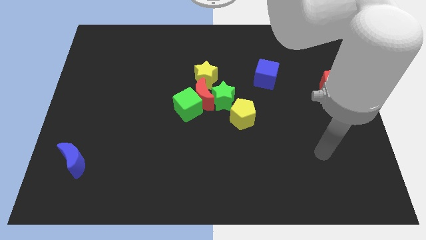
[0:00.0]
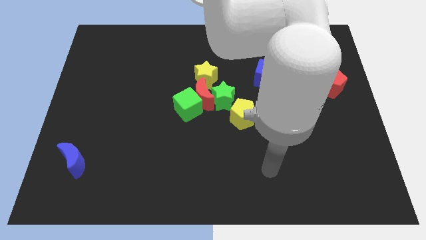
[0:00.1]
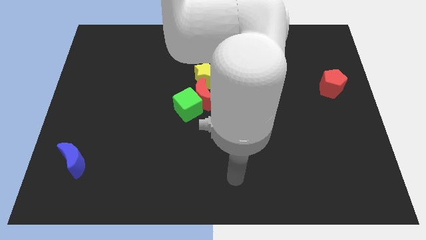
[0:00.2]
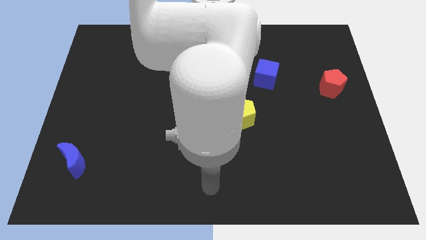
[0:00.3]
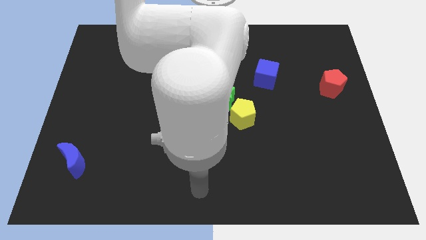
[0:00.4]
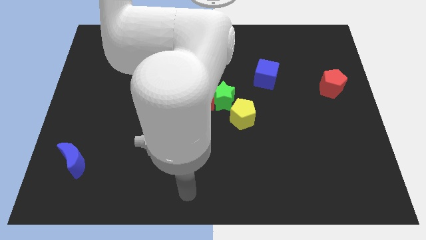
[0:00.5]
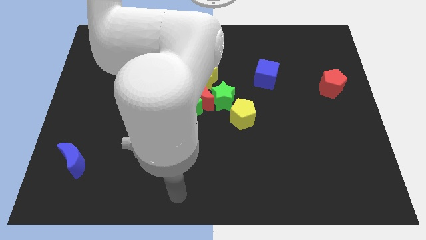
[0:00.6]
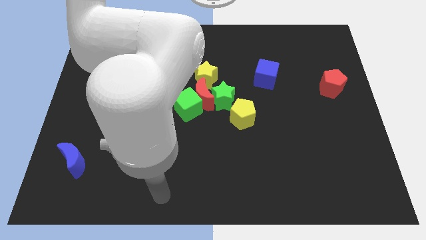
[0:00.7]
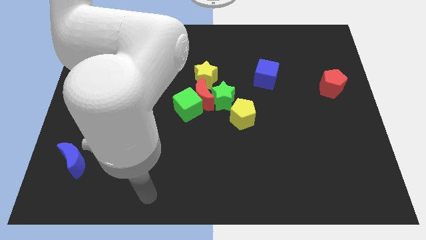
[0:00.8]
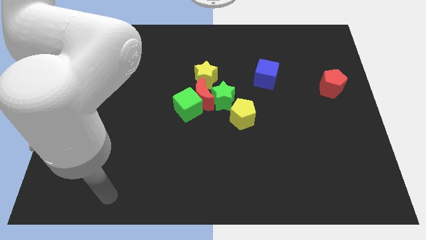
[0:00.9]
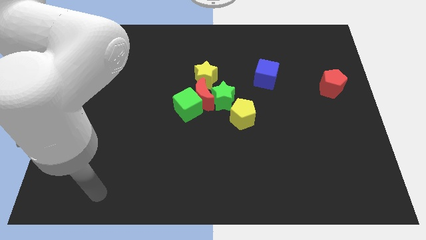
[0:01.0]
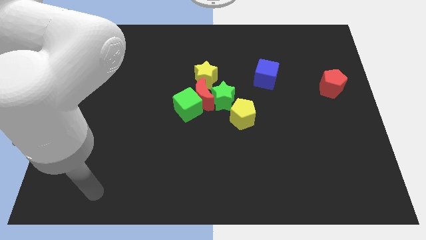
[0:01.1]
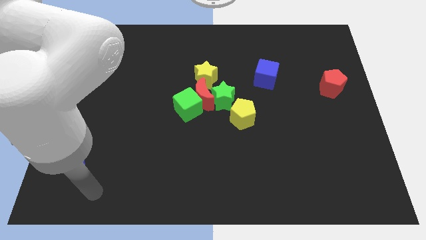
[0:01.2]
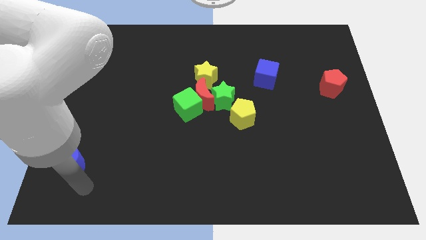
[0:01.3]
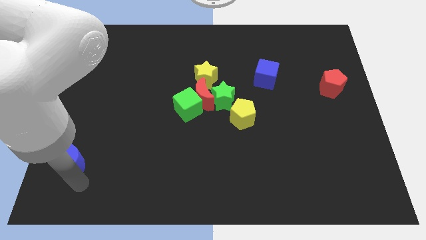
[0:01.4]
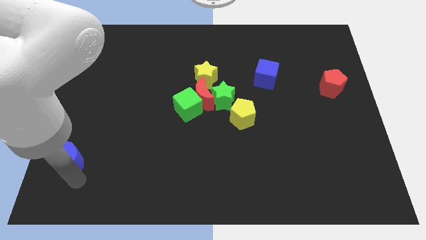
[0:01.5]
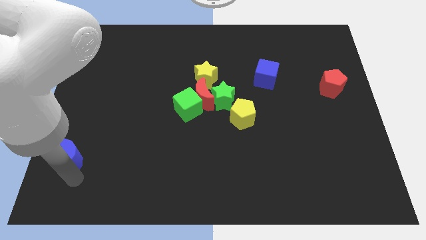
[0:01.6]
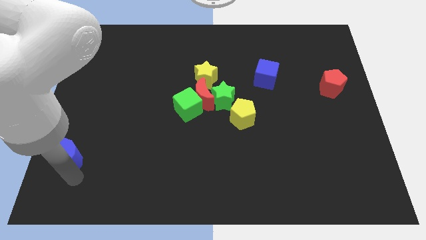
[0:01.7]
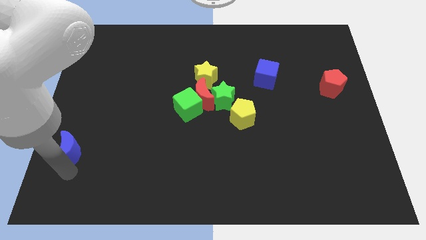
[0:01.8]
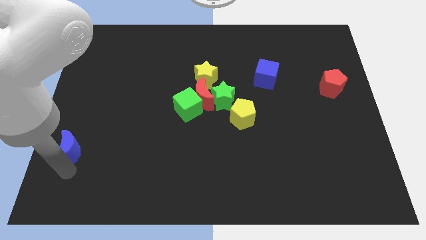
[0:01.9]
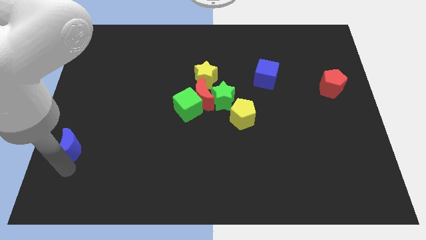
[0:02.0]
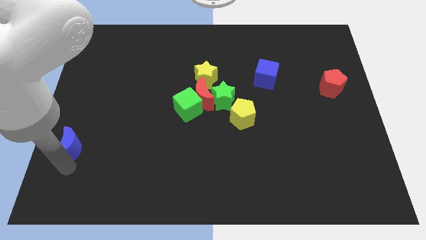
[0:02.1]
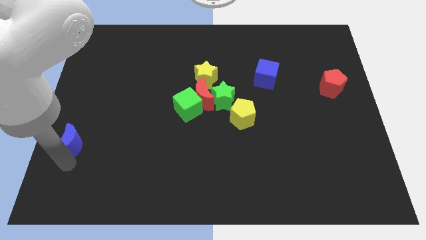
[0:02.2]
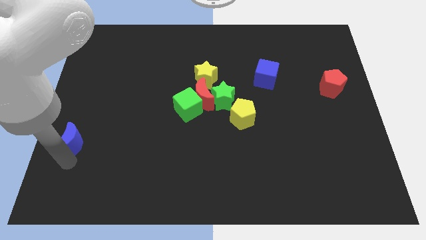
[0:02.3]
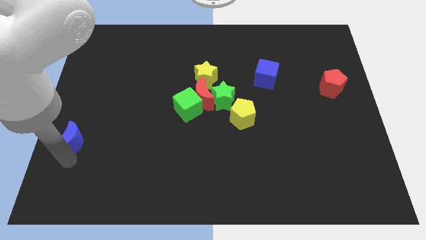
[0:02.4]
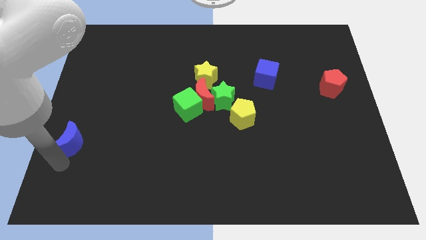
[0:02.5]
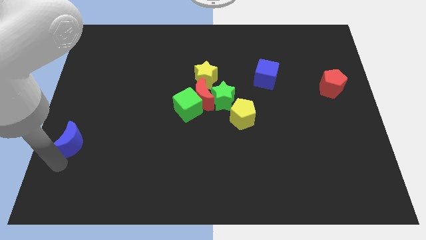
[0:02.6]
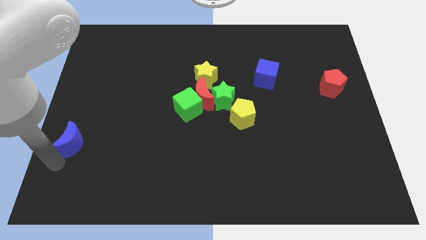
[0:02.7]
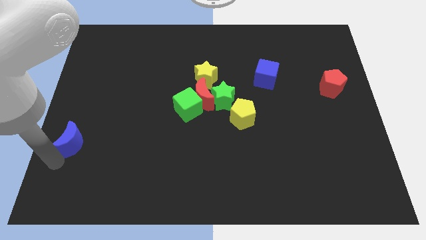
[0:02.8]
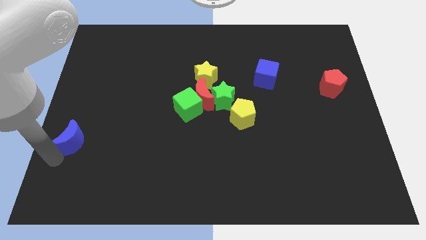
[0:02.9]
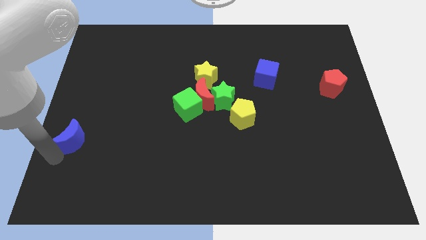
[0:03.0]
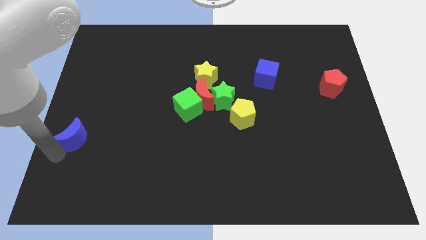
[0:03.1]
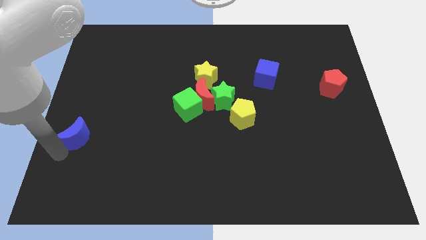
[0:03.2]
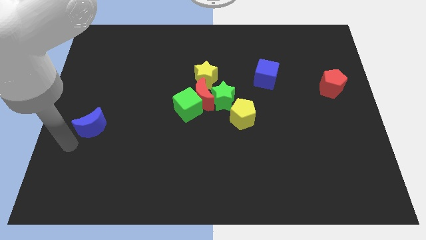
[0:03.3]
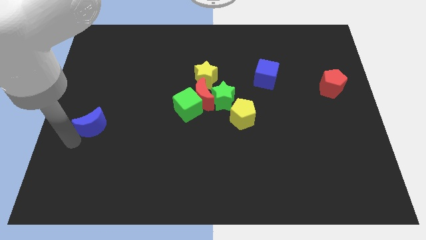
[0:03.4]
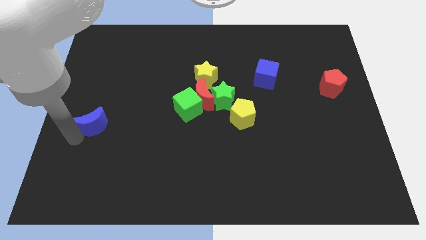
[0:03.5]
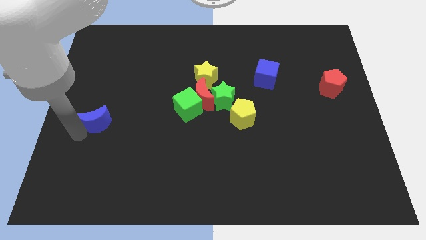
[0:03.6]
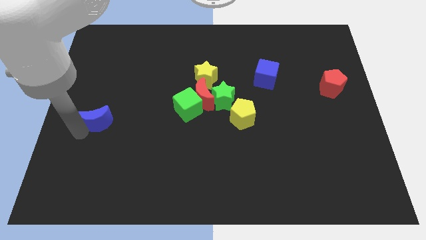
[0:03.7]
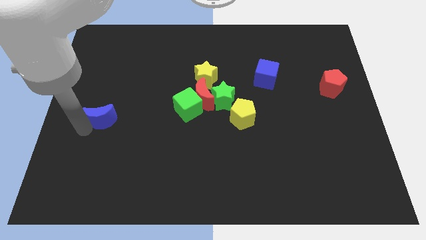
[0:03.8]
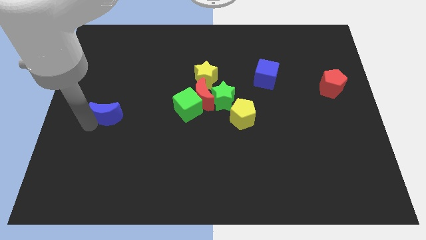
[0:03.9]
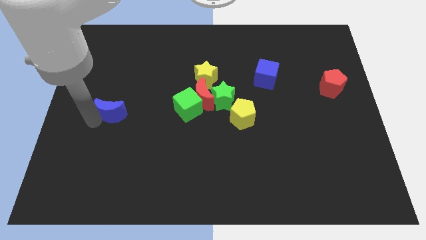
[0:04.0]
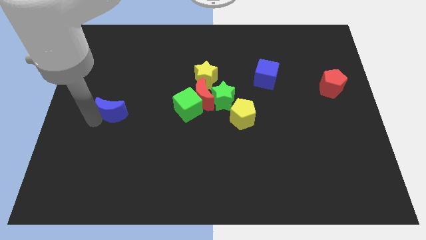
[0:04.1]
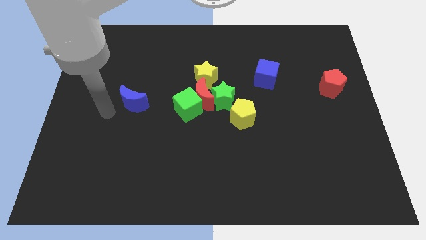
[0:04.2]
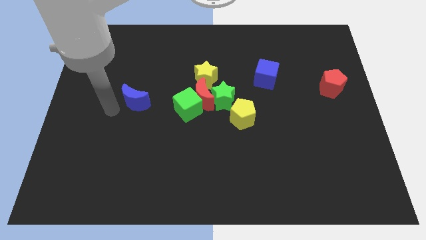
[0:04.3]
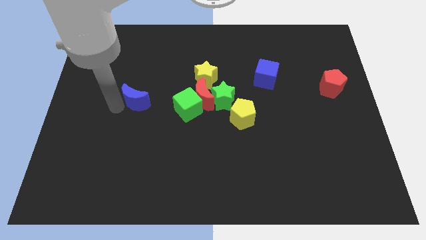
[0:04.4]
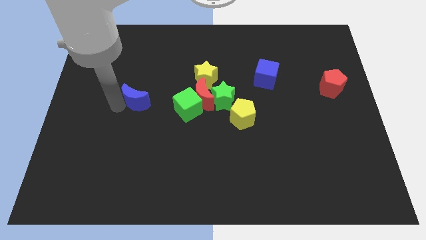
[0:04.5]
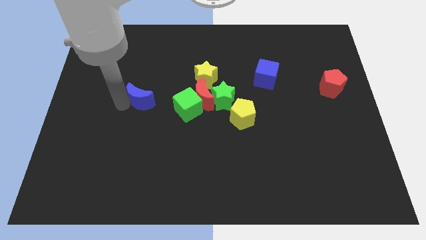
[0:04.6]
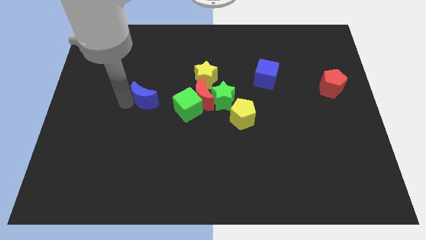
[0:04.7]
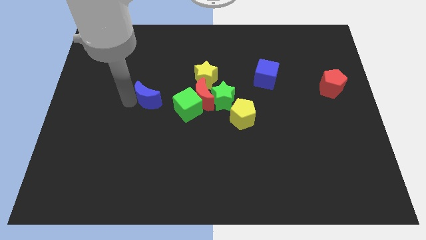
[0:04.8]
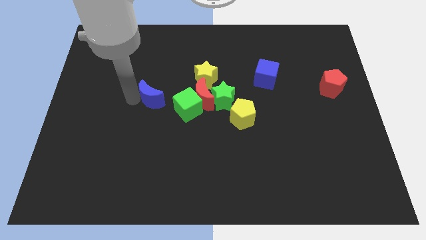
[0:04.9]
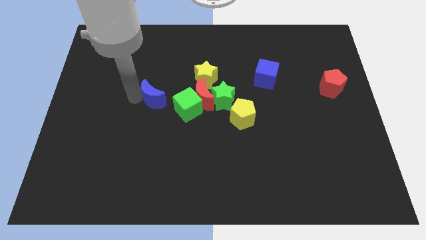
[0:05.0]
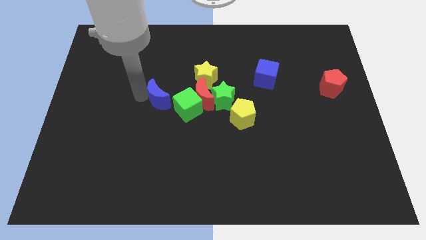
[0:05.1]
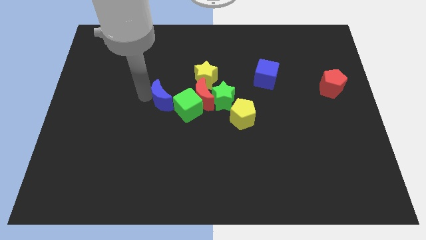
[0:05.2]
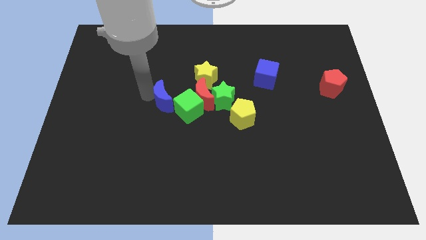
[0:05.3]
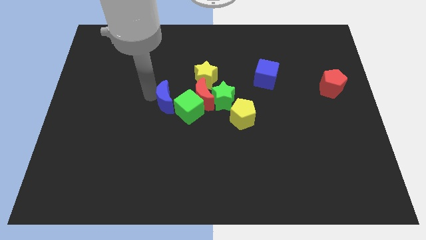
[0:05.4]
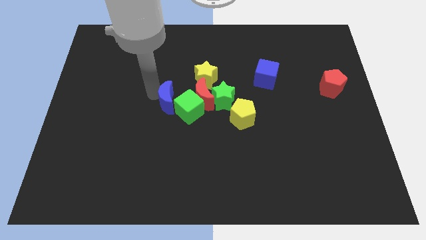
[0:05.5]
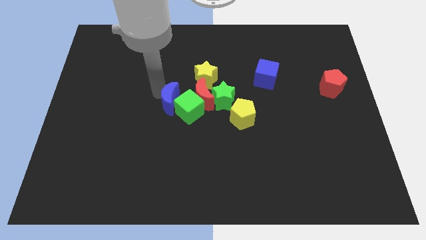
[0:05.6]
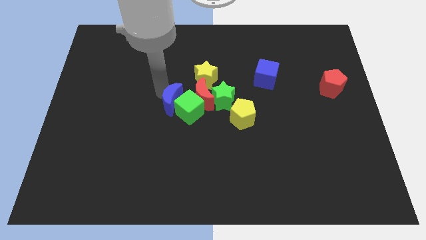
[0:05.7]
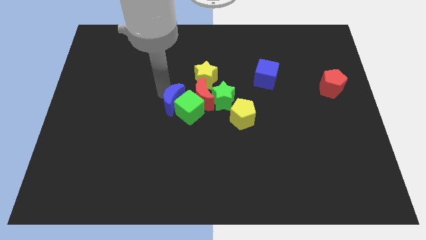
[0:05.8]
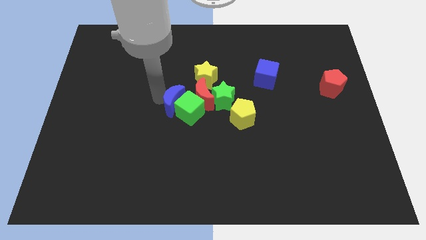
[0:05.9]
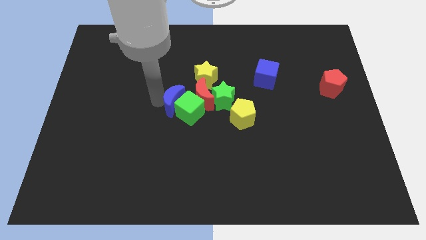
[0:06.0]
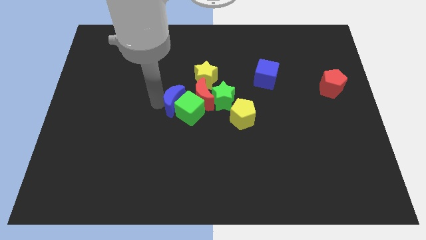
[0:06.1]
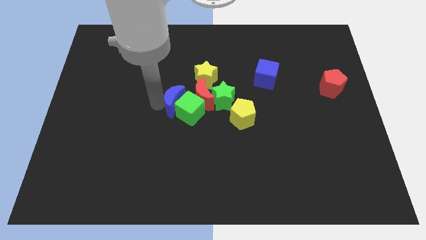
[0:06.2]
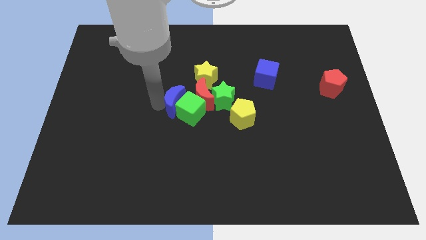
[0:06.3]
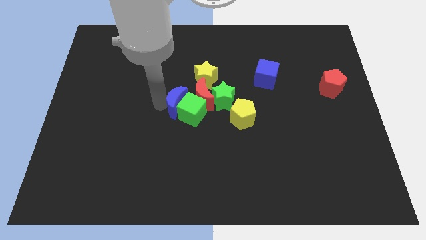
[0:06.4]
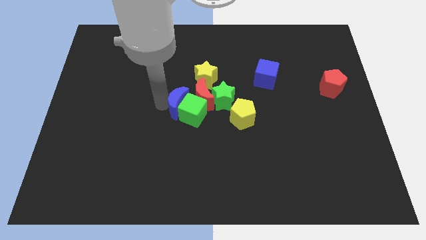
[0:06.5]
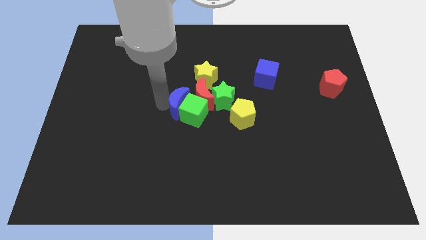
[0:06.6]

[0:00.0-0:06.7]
slide the blue moon to the red moon

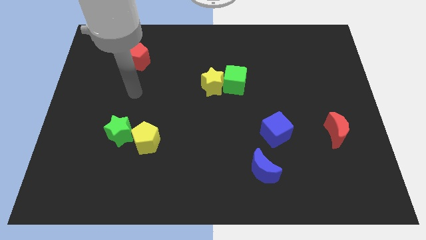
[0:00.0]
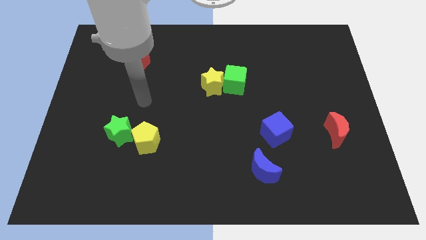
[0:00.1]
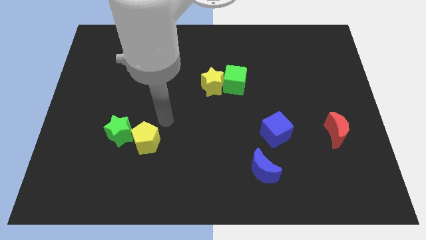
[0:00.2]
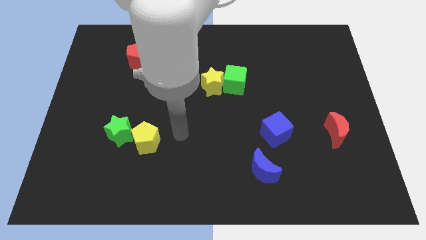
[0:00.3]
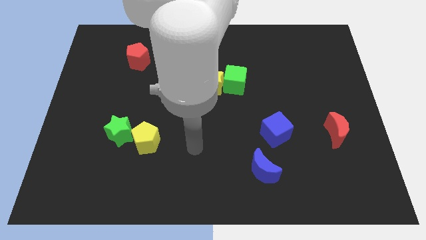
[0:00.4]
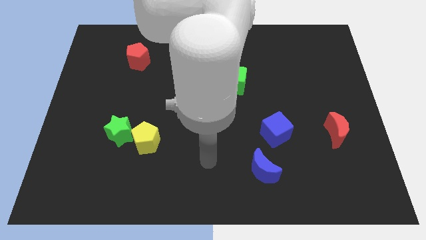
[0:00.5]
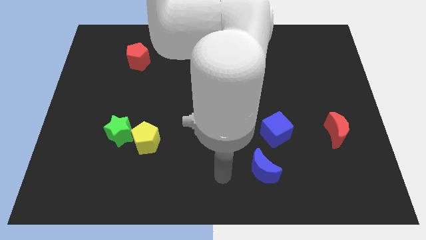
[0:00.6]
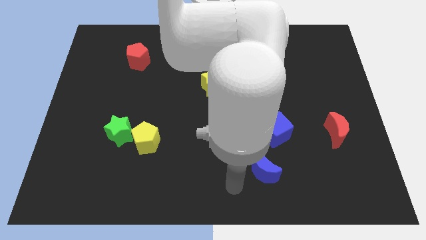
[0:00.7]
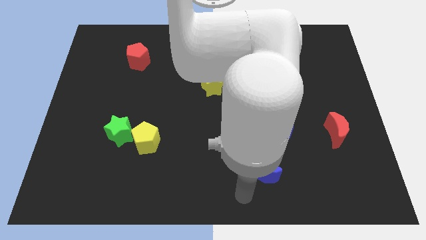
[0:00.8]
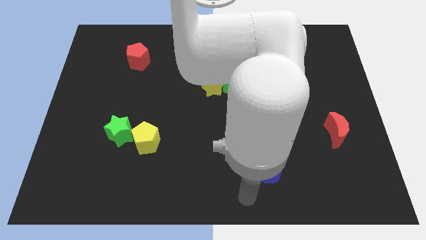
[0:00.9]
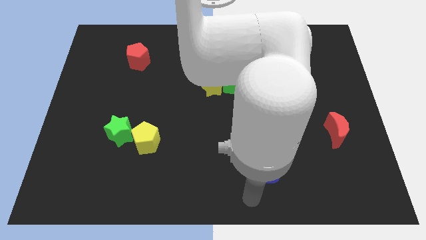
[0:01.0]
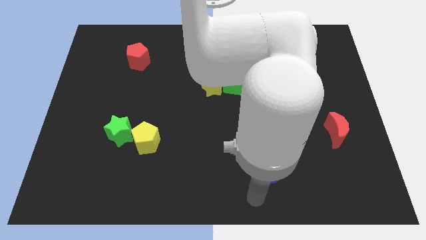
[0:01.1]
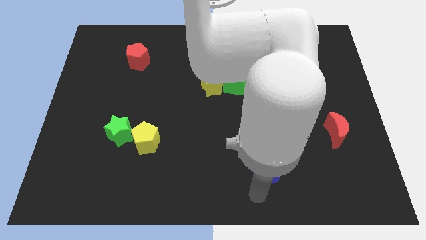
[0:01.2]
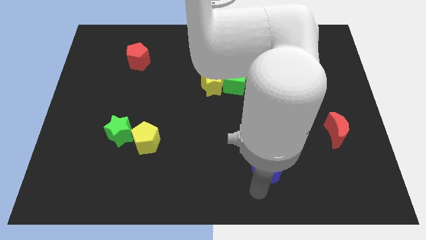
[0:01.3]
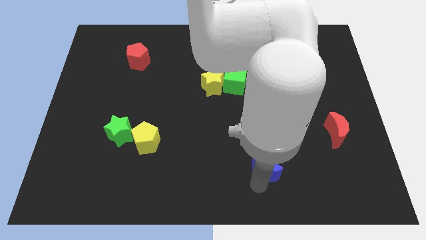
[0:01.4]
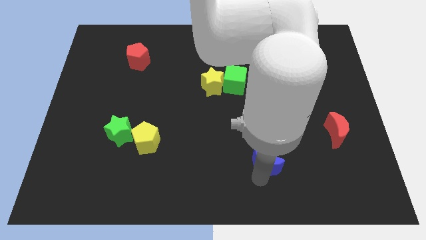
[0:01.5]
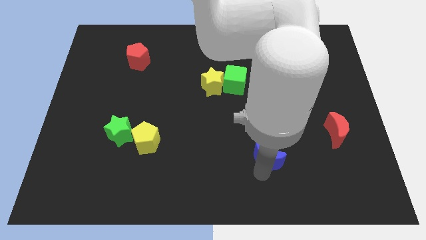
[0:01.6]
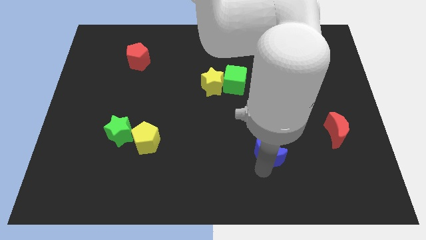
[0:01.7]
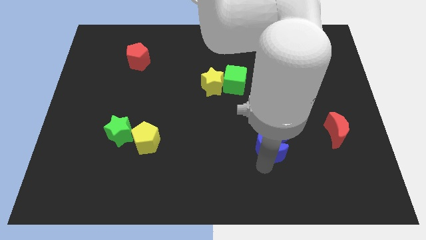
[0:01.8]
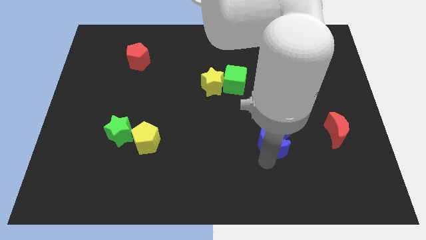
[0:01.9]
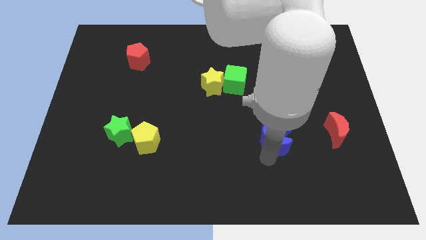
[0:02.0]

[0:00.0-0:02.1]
put the blue moon close to the blue cube
